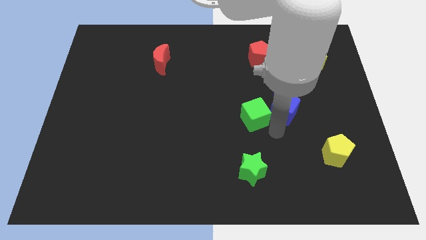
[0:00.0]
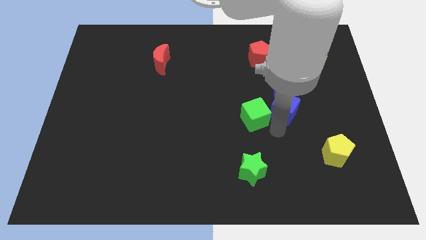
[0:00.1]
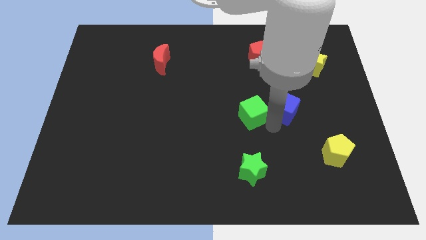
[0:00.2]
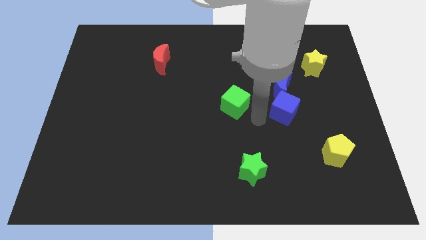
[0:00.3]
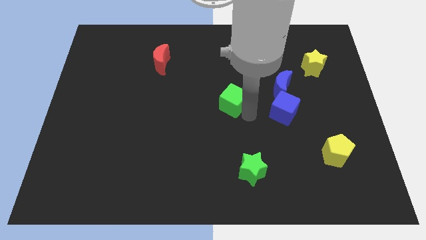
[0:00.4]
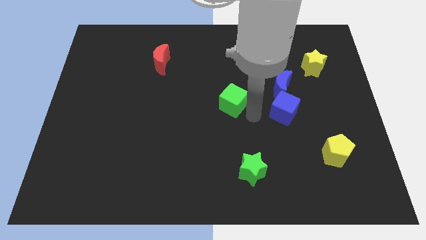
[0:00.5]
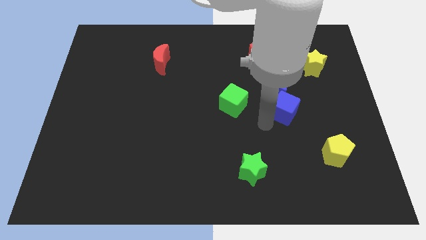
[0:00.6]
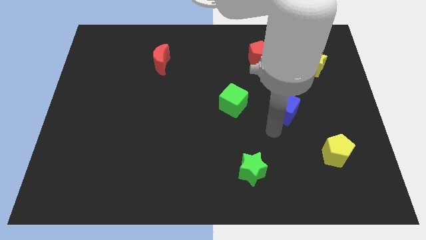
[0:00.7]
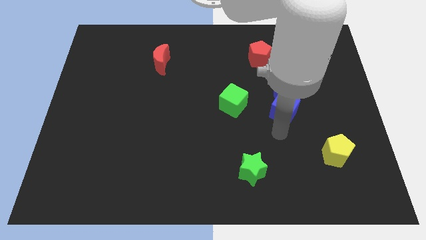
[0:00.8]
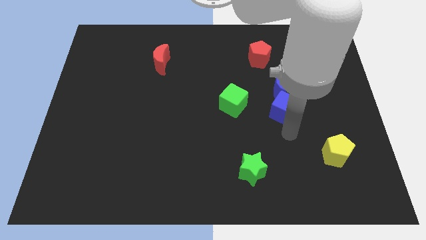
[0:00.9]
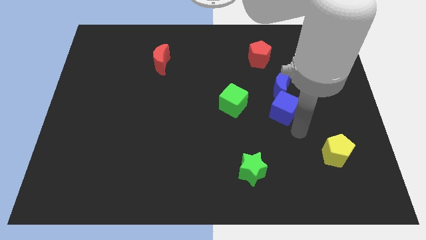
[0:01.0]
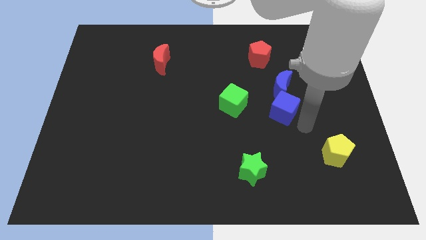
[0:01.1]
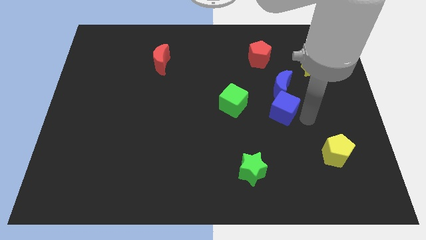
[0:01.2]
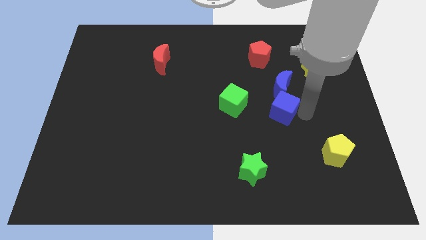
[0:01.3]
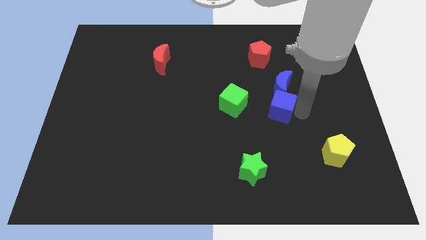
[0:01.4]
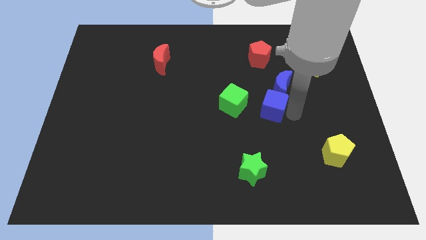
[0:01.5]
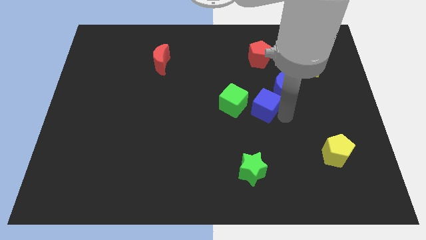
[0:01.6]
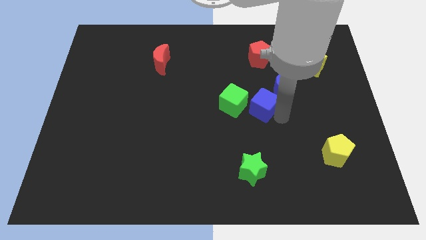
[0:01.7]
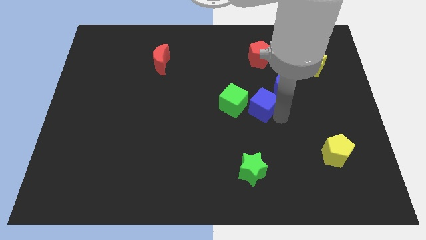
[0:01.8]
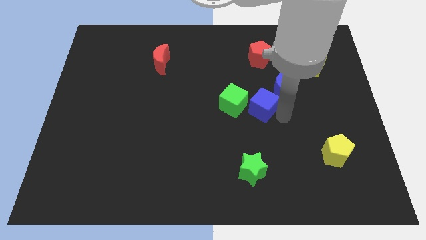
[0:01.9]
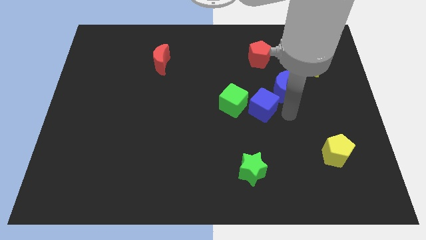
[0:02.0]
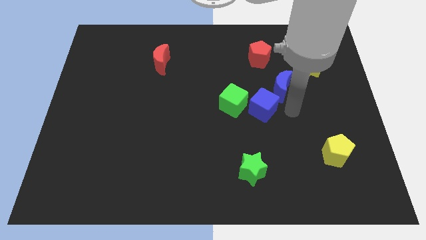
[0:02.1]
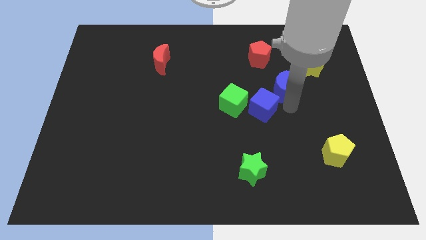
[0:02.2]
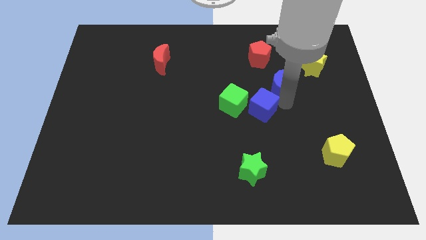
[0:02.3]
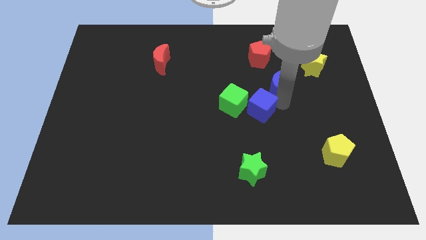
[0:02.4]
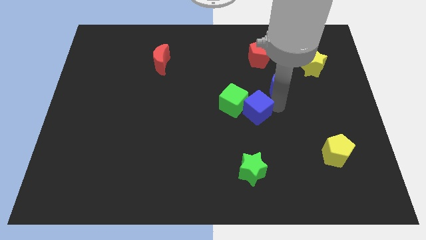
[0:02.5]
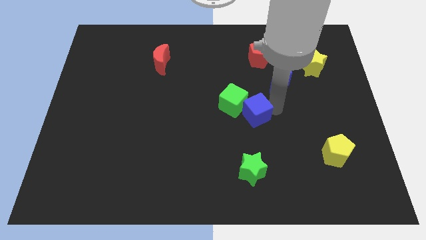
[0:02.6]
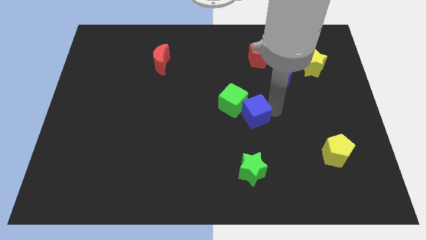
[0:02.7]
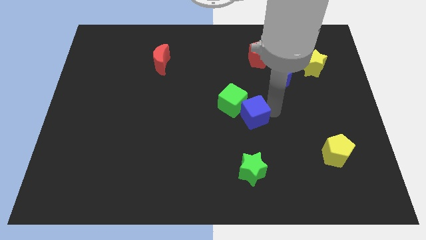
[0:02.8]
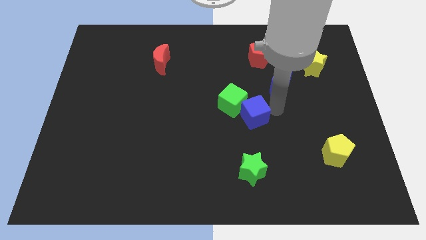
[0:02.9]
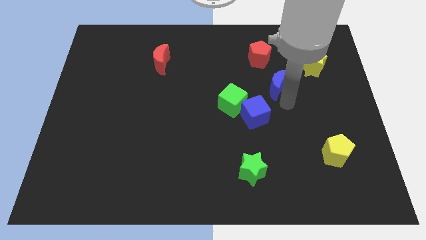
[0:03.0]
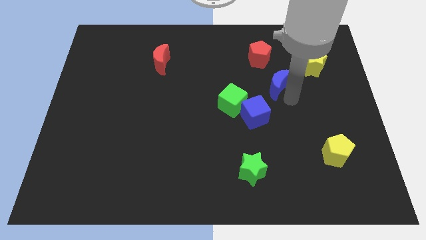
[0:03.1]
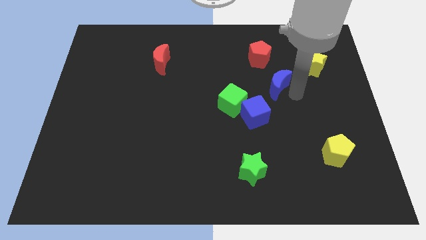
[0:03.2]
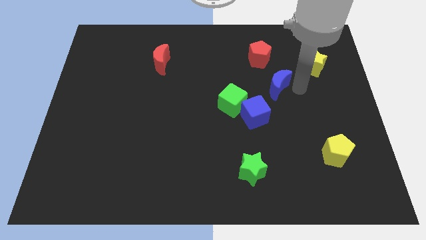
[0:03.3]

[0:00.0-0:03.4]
move the blue cube into the green cube

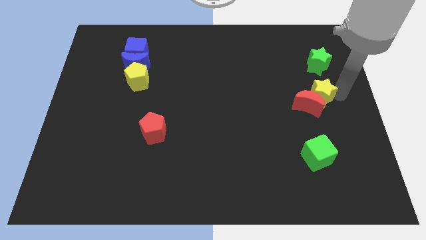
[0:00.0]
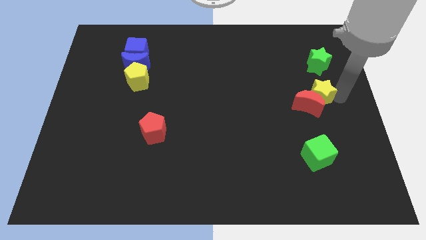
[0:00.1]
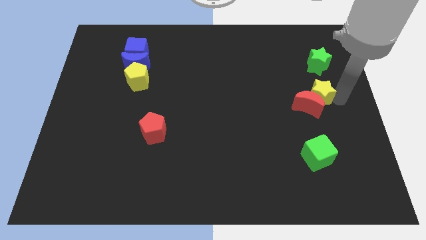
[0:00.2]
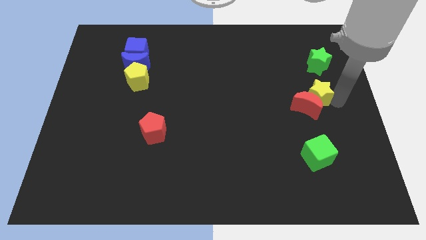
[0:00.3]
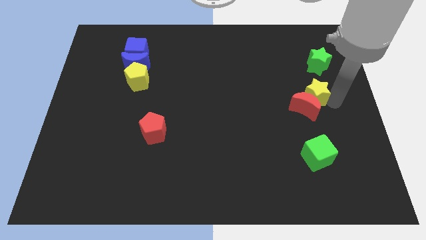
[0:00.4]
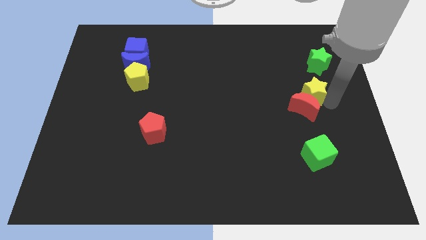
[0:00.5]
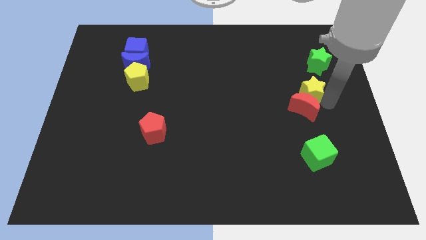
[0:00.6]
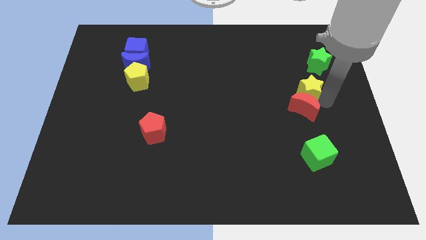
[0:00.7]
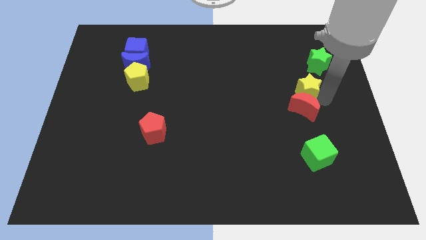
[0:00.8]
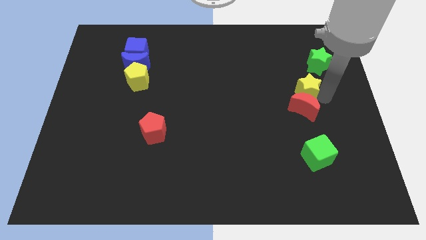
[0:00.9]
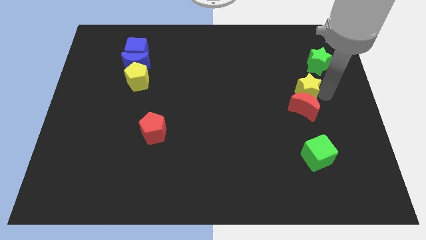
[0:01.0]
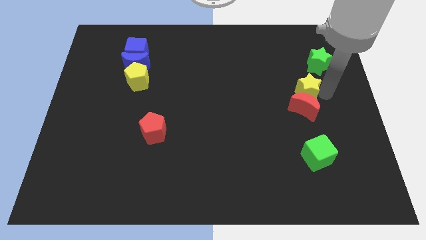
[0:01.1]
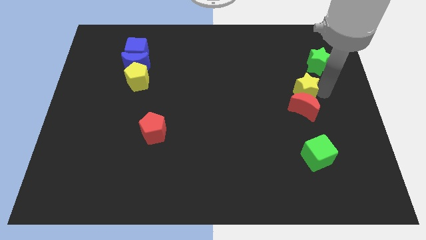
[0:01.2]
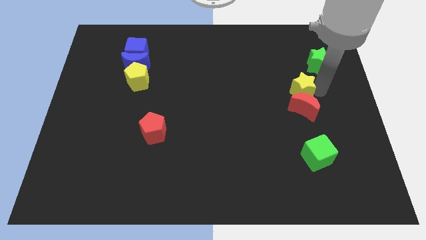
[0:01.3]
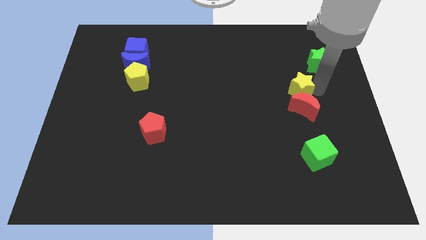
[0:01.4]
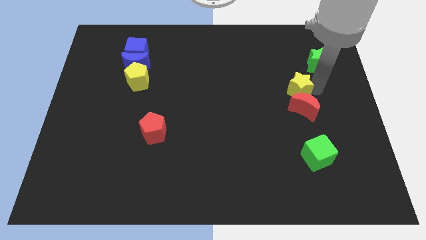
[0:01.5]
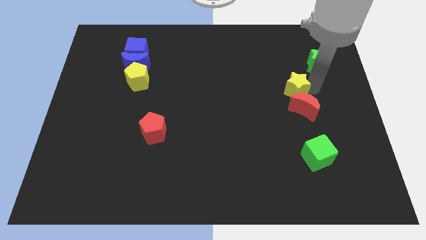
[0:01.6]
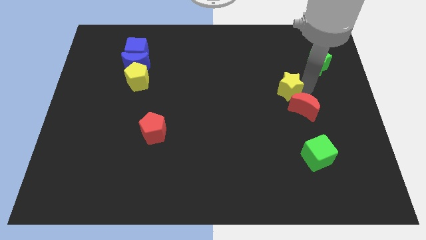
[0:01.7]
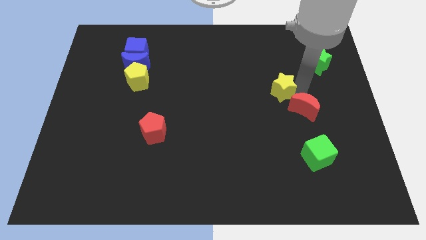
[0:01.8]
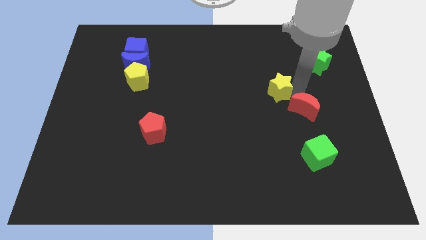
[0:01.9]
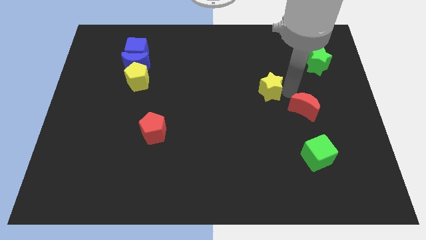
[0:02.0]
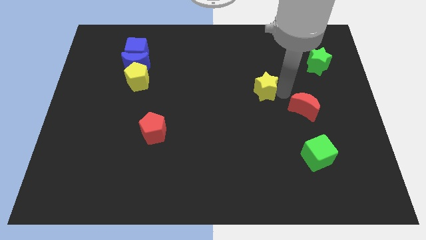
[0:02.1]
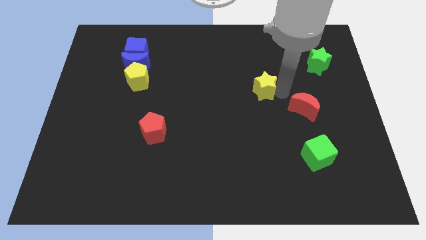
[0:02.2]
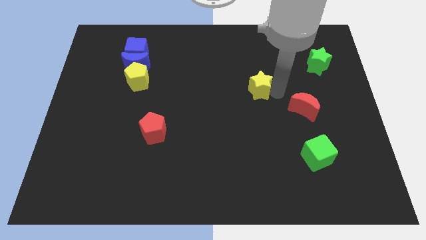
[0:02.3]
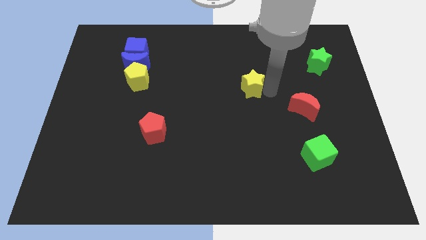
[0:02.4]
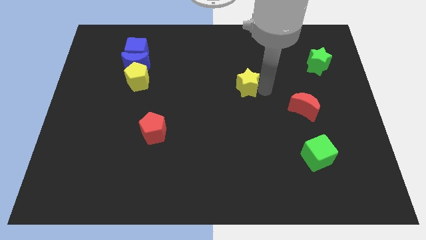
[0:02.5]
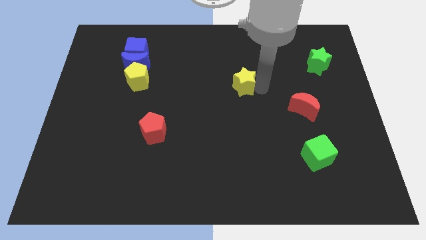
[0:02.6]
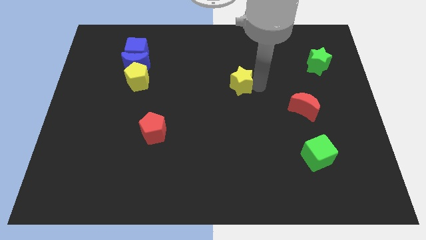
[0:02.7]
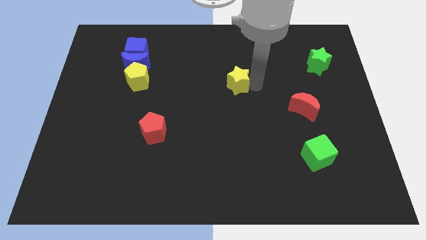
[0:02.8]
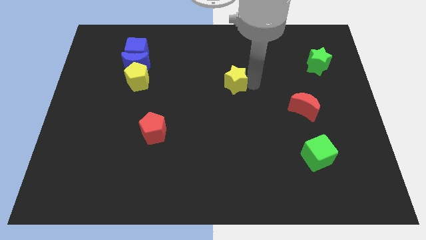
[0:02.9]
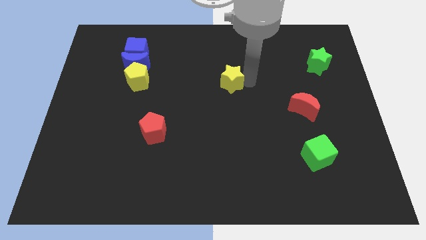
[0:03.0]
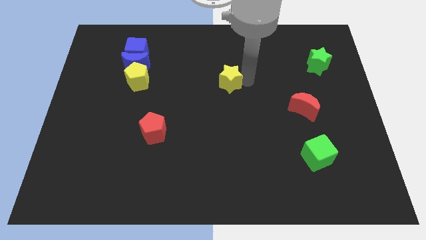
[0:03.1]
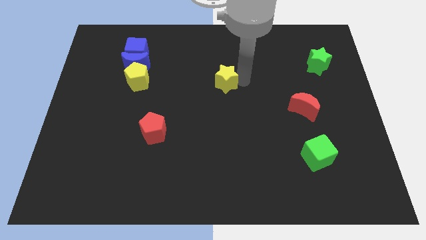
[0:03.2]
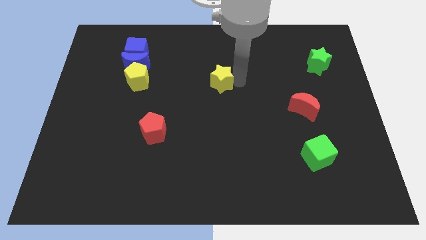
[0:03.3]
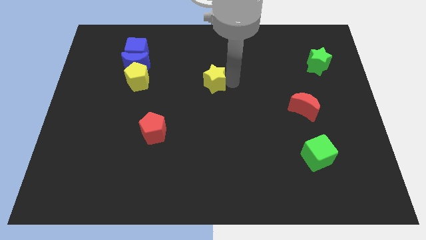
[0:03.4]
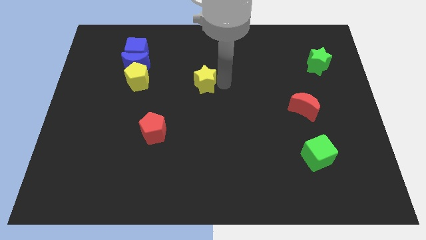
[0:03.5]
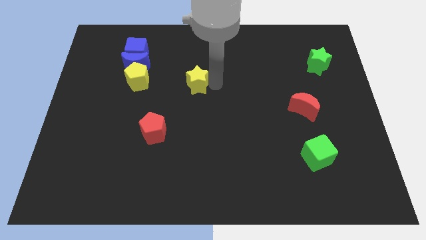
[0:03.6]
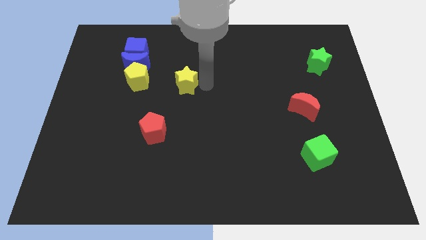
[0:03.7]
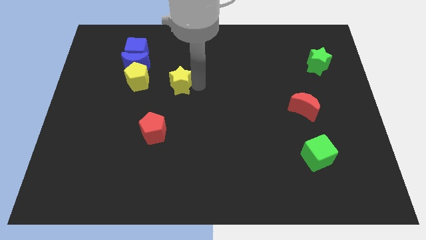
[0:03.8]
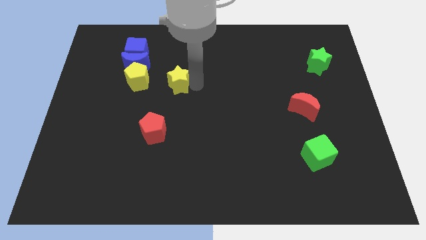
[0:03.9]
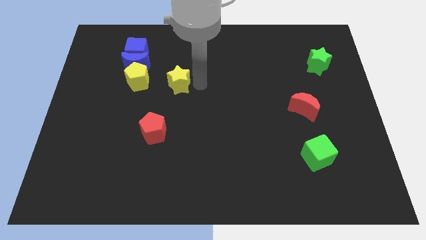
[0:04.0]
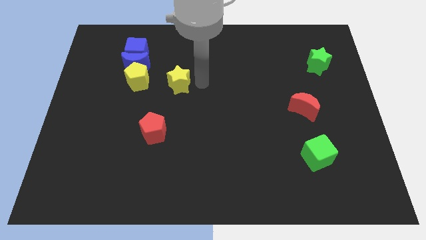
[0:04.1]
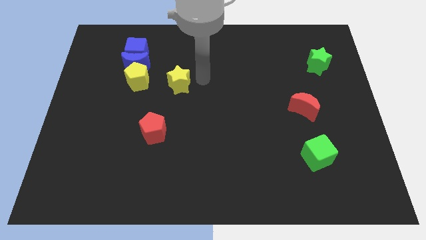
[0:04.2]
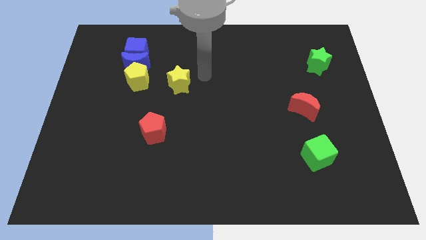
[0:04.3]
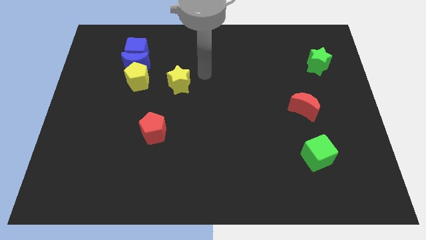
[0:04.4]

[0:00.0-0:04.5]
move the yellow star to the right of the yellow pentagon

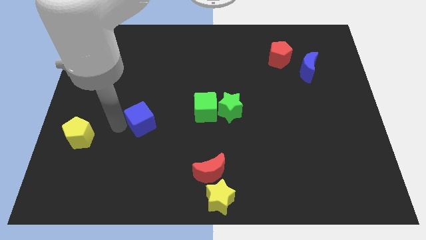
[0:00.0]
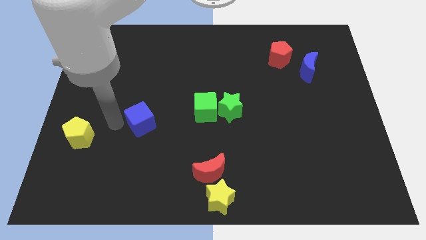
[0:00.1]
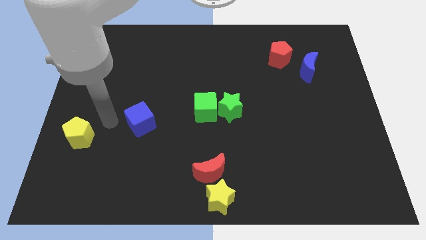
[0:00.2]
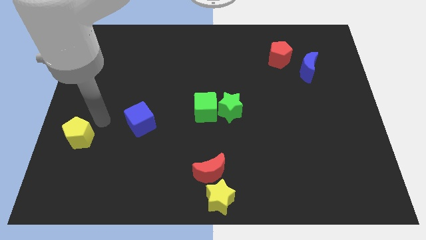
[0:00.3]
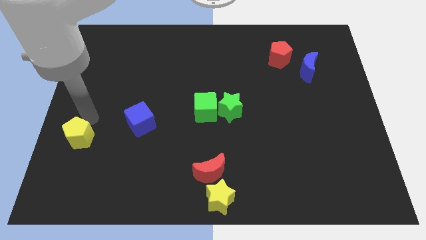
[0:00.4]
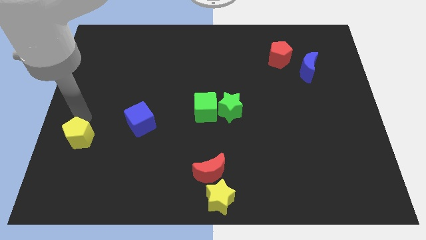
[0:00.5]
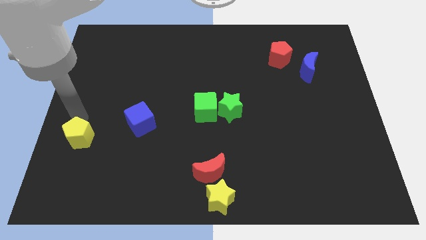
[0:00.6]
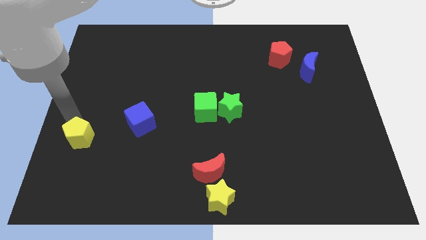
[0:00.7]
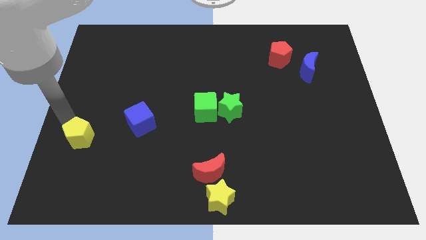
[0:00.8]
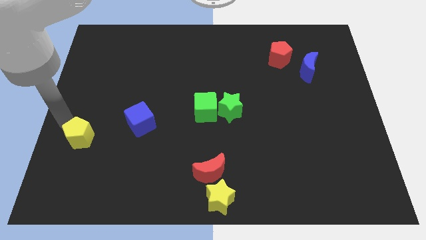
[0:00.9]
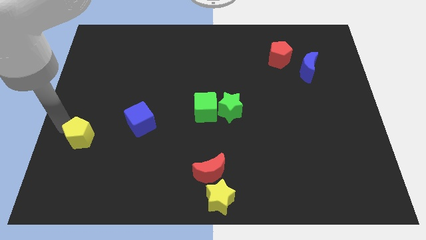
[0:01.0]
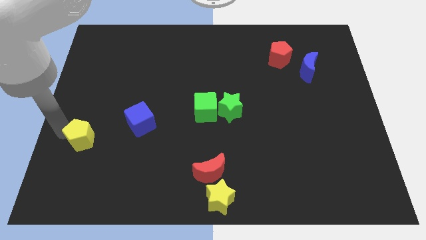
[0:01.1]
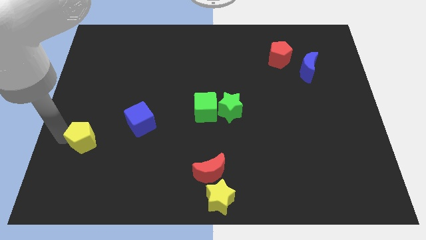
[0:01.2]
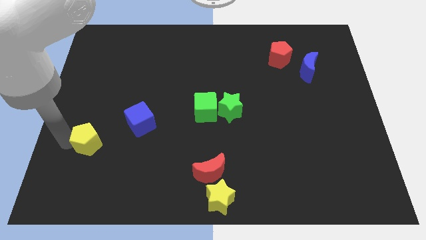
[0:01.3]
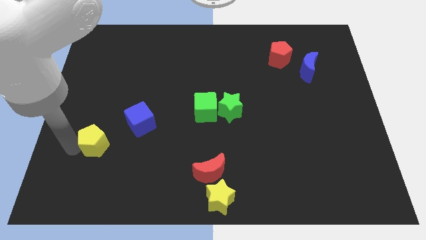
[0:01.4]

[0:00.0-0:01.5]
move your arm away from the blue cube
